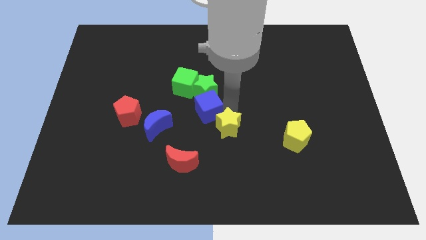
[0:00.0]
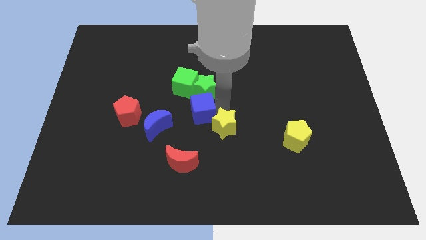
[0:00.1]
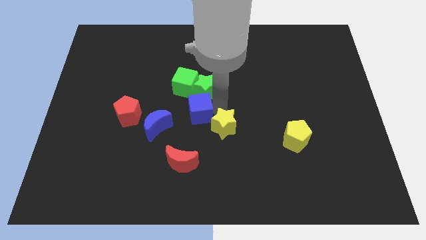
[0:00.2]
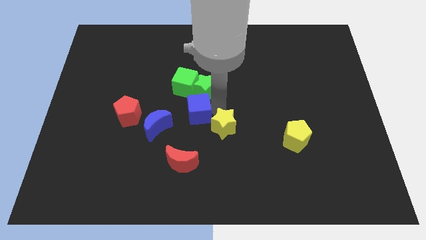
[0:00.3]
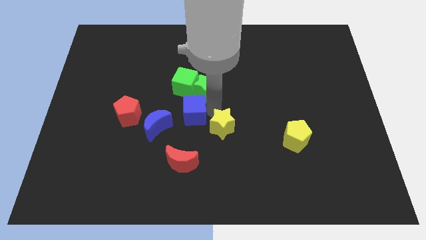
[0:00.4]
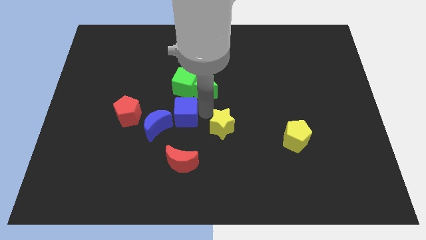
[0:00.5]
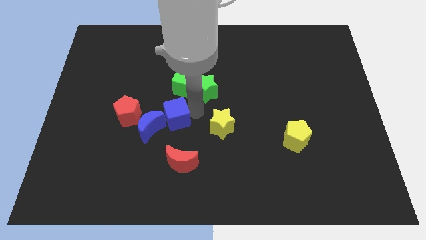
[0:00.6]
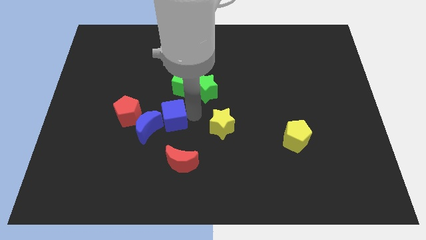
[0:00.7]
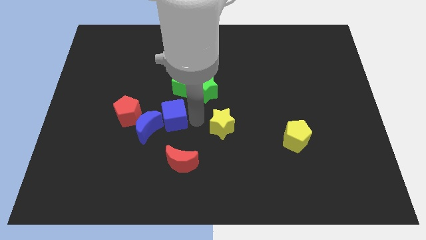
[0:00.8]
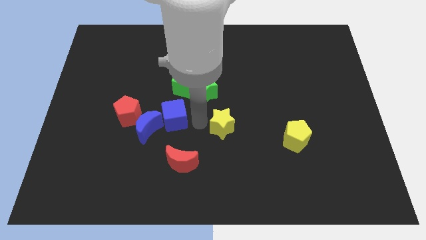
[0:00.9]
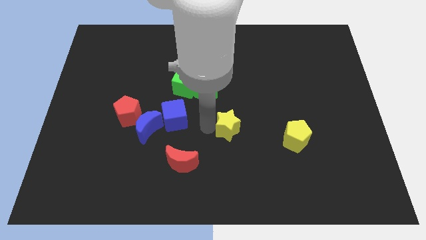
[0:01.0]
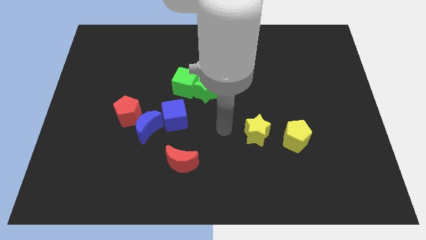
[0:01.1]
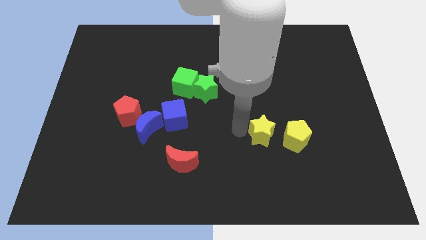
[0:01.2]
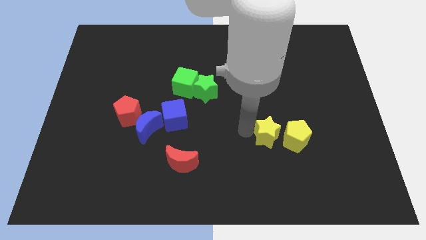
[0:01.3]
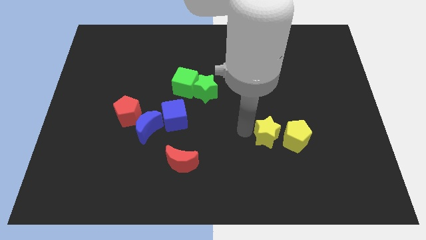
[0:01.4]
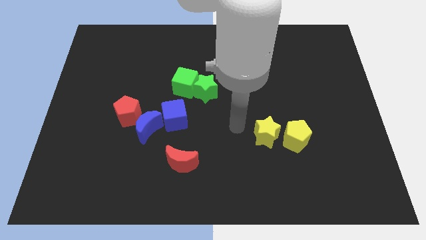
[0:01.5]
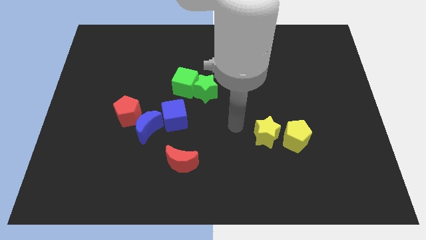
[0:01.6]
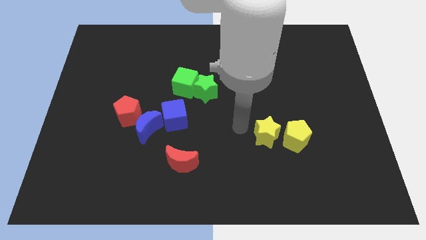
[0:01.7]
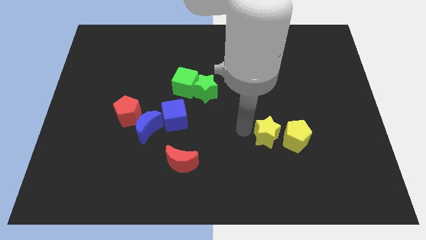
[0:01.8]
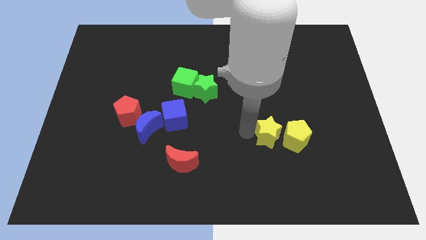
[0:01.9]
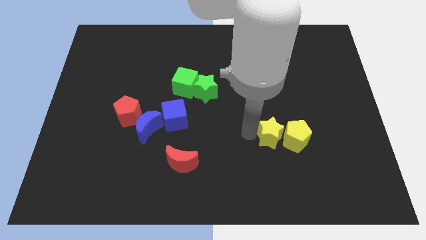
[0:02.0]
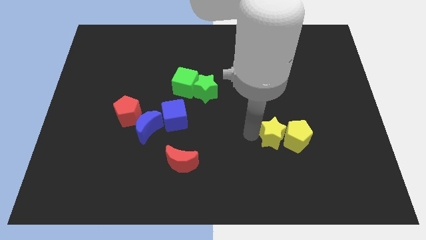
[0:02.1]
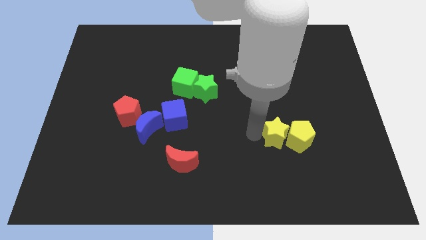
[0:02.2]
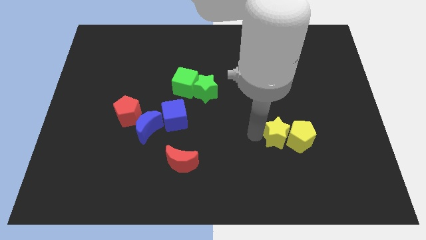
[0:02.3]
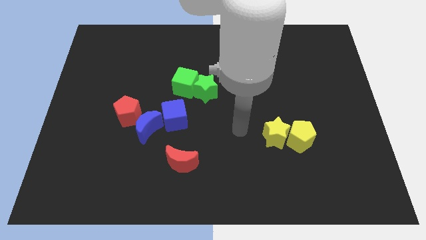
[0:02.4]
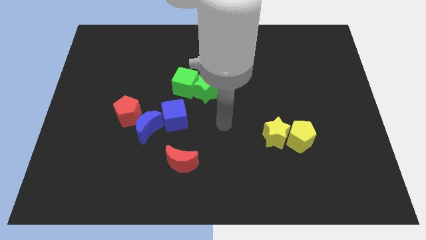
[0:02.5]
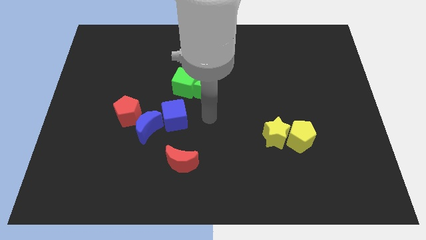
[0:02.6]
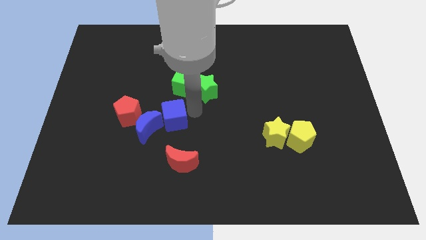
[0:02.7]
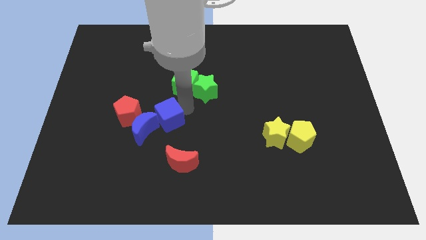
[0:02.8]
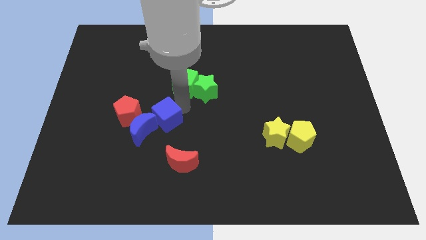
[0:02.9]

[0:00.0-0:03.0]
separate blue cube from yellow star

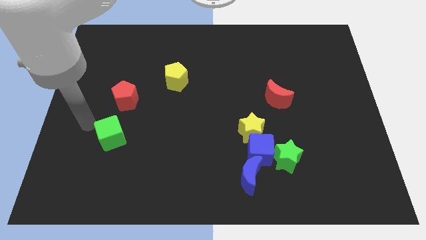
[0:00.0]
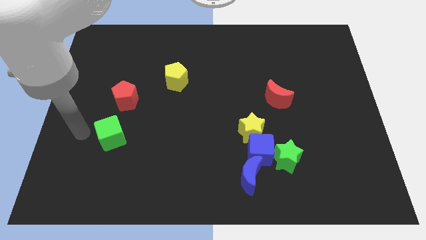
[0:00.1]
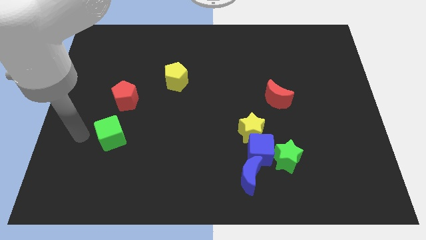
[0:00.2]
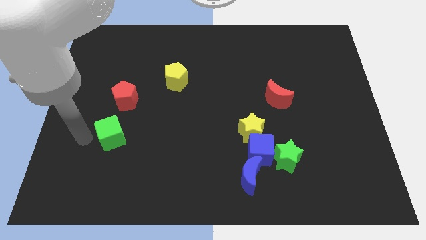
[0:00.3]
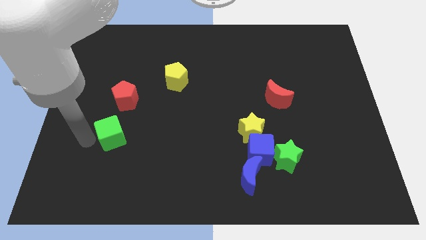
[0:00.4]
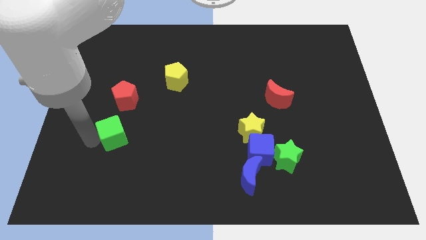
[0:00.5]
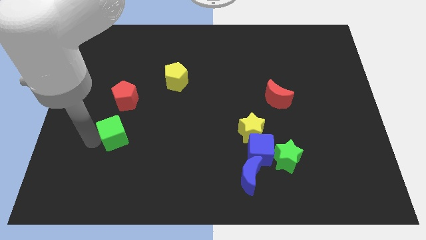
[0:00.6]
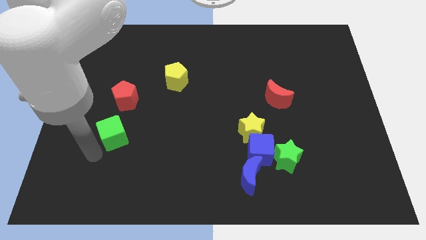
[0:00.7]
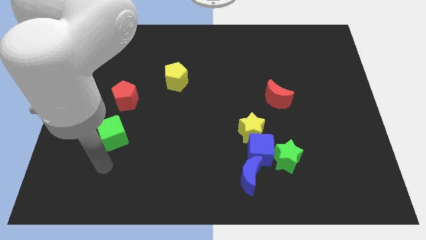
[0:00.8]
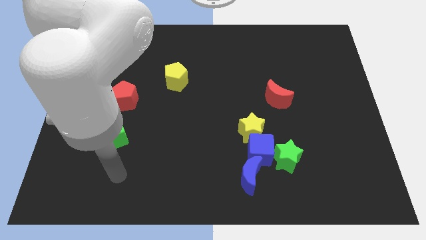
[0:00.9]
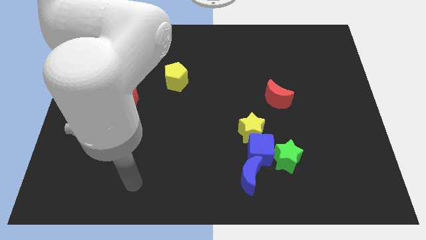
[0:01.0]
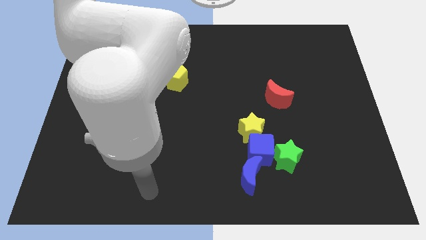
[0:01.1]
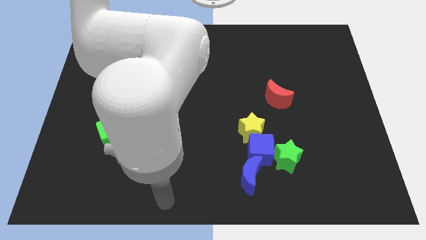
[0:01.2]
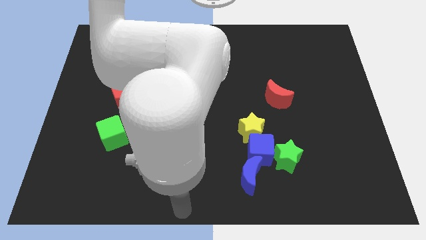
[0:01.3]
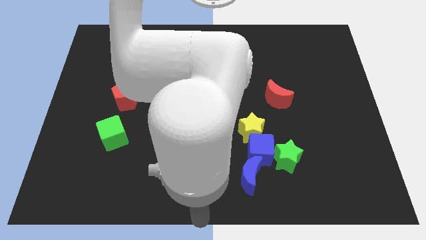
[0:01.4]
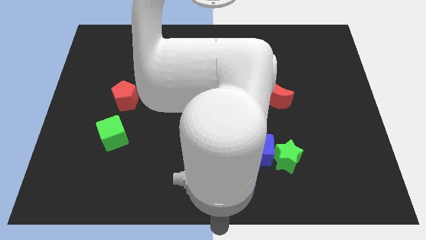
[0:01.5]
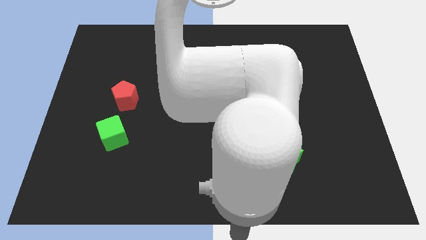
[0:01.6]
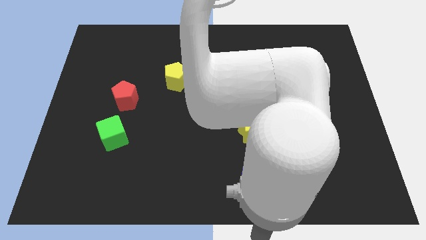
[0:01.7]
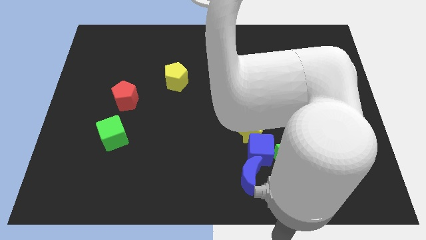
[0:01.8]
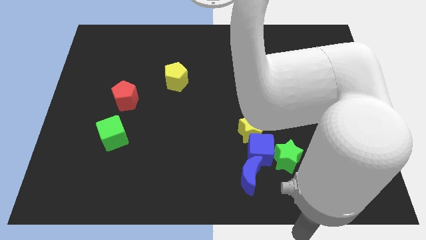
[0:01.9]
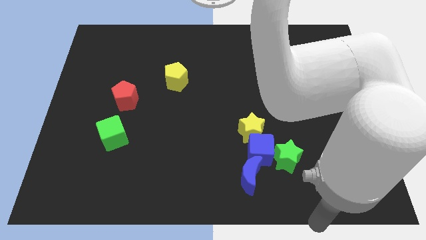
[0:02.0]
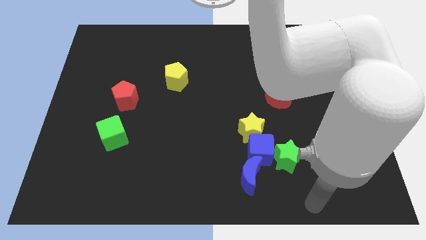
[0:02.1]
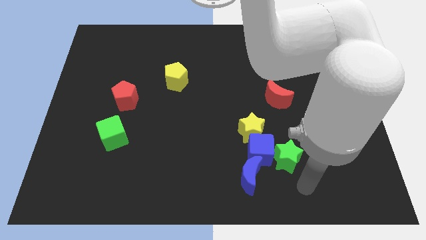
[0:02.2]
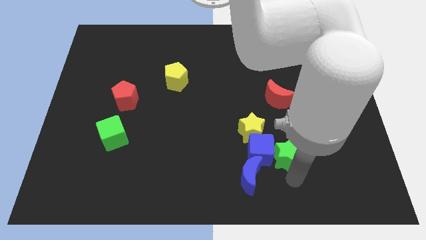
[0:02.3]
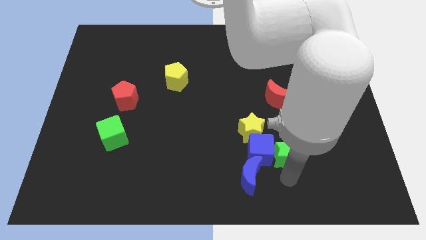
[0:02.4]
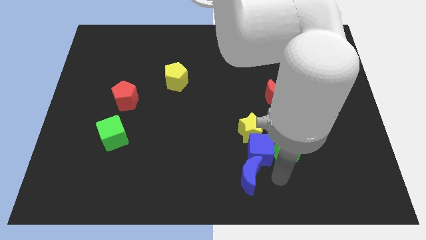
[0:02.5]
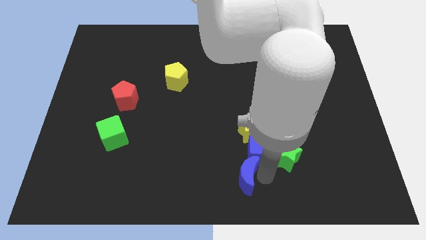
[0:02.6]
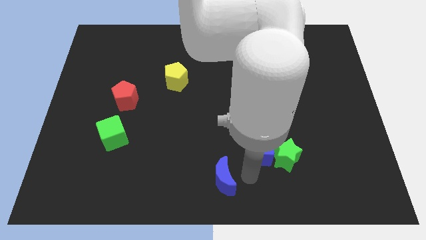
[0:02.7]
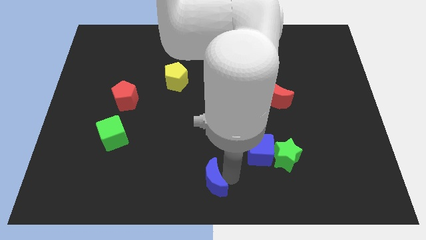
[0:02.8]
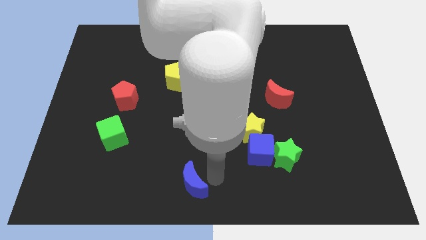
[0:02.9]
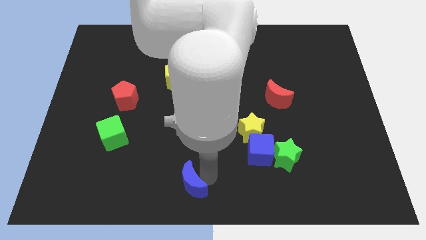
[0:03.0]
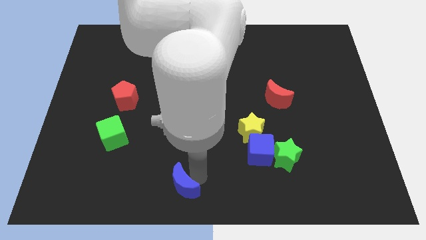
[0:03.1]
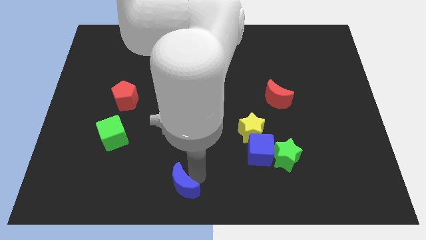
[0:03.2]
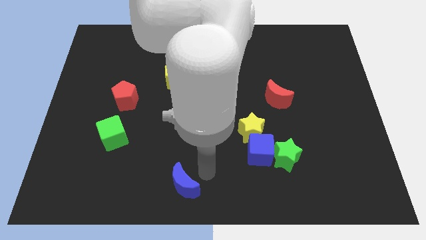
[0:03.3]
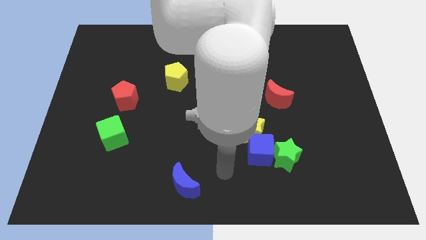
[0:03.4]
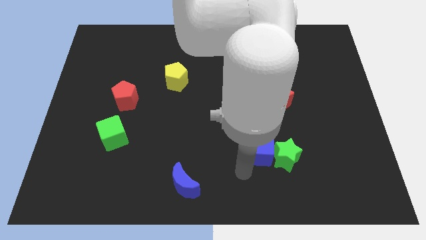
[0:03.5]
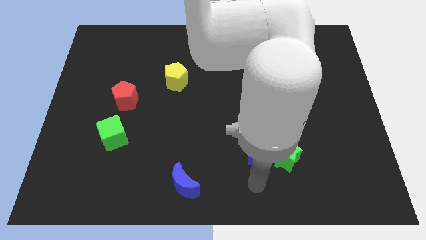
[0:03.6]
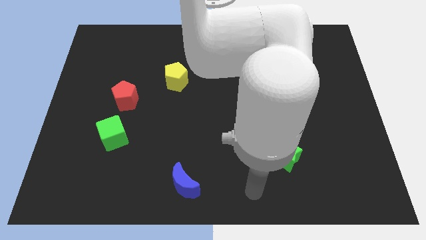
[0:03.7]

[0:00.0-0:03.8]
move the blue crescent vertically to the yellow pentagon

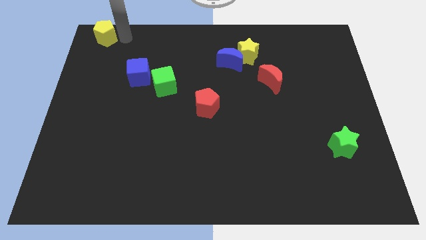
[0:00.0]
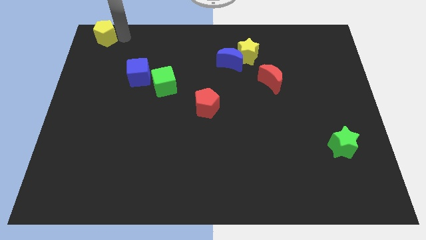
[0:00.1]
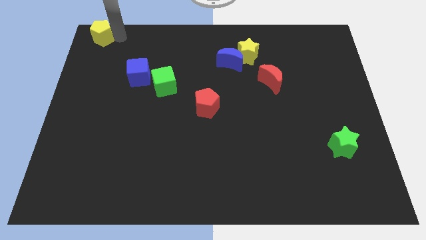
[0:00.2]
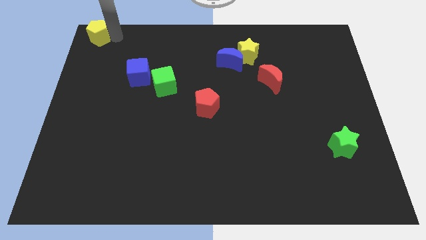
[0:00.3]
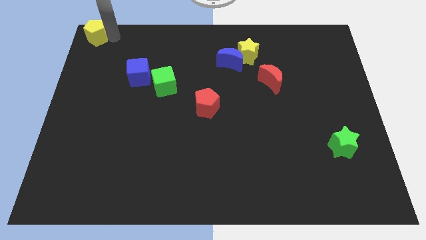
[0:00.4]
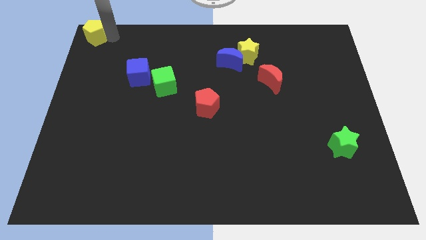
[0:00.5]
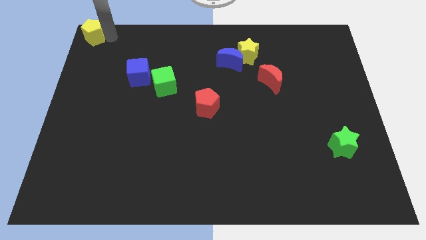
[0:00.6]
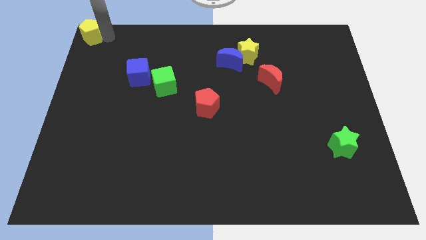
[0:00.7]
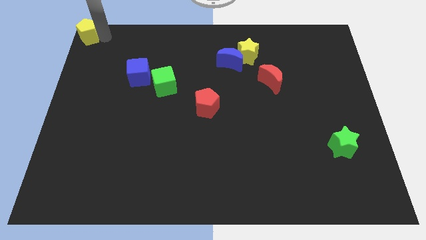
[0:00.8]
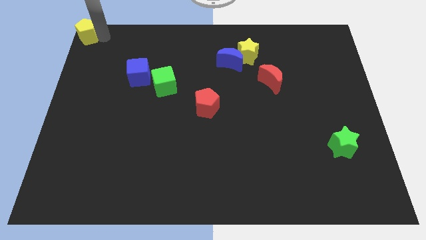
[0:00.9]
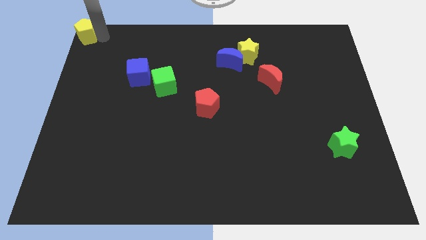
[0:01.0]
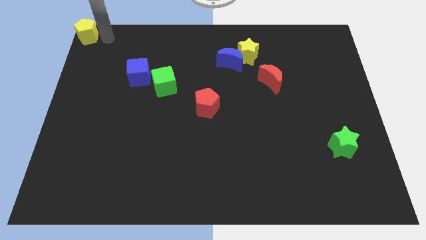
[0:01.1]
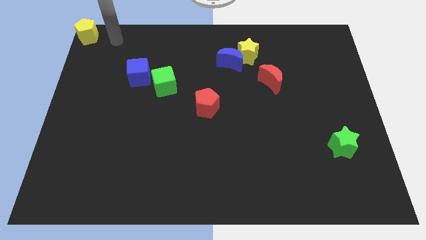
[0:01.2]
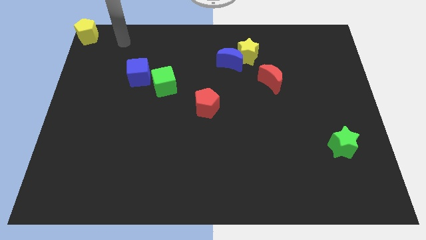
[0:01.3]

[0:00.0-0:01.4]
move the yellow pentagon to the top left corner edge of the board

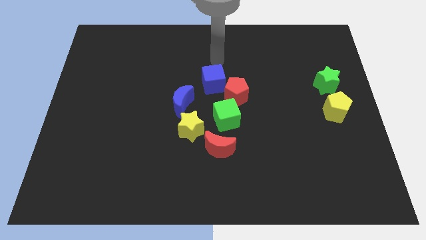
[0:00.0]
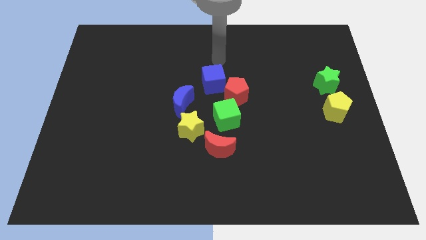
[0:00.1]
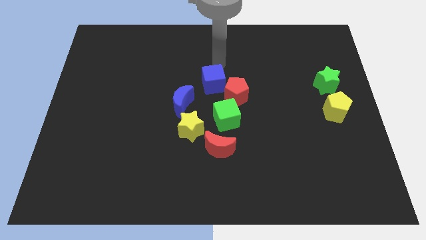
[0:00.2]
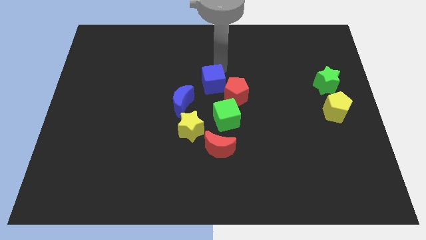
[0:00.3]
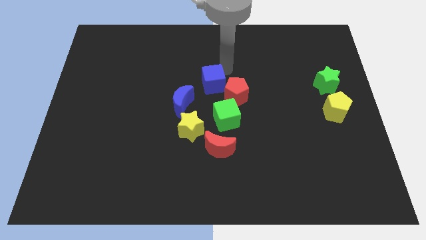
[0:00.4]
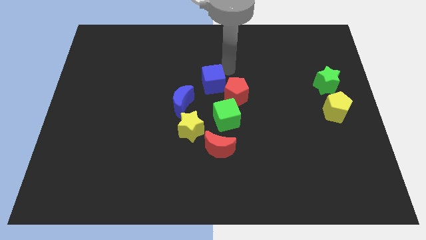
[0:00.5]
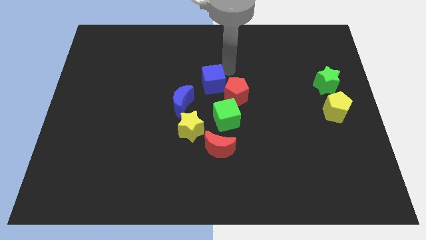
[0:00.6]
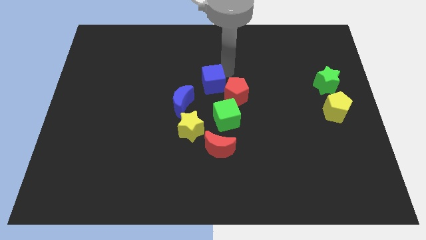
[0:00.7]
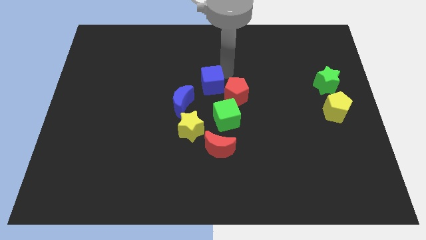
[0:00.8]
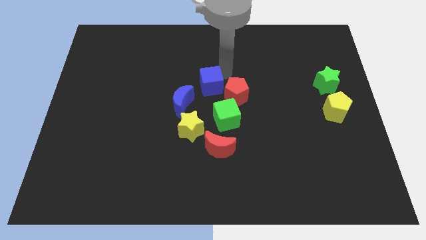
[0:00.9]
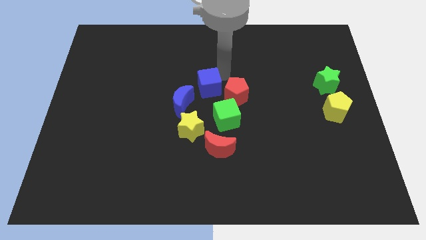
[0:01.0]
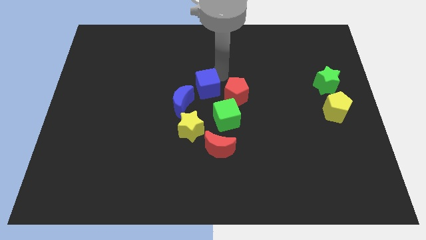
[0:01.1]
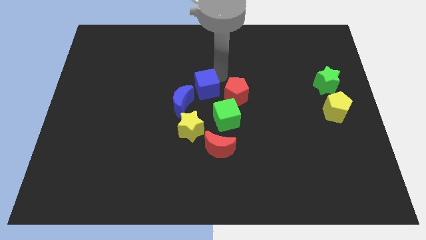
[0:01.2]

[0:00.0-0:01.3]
push the blue cube close to the blue moon
